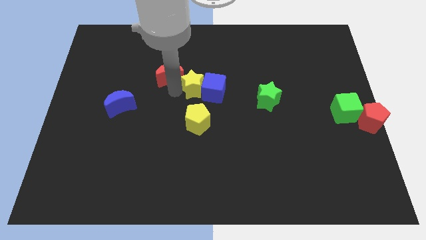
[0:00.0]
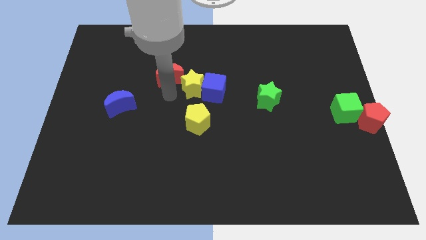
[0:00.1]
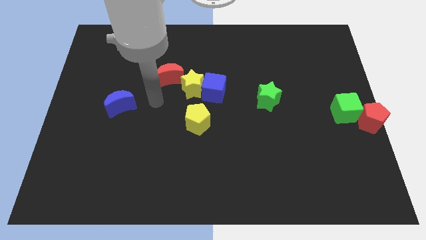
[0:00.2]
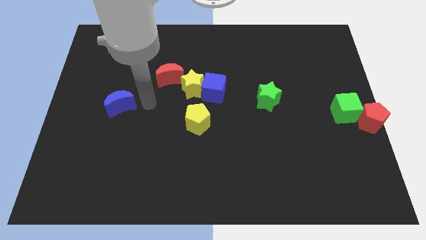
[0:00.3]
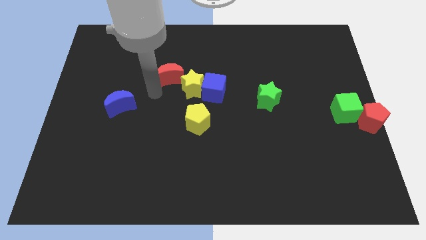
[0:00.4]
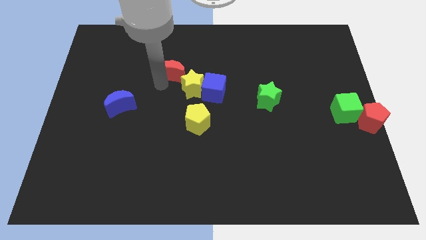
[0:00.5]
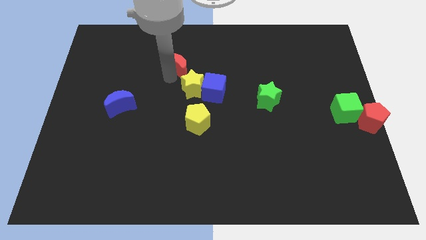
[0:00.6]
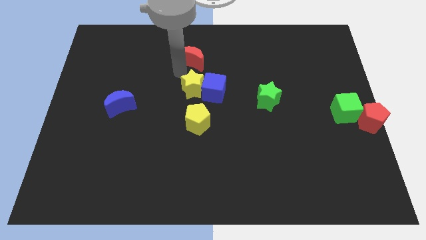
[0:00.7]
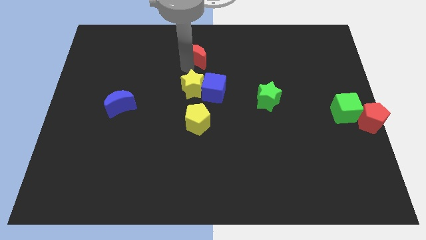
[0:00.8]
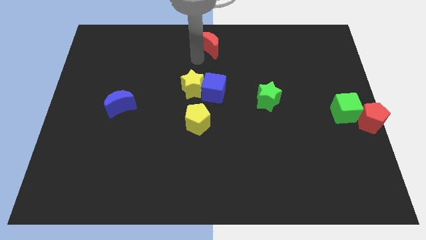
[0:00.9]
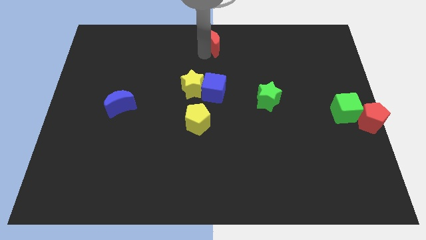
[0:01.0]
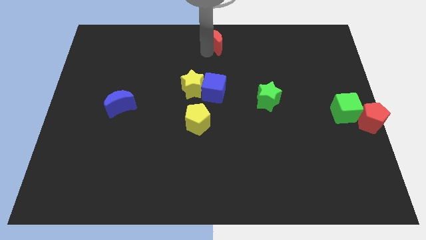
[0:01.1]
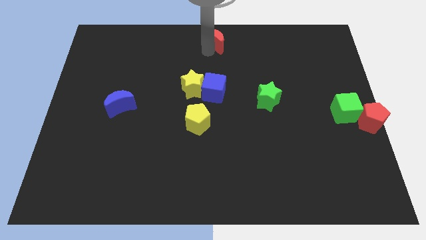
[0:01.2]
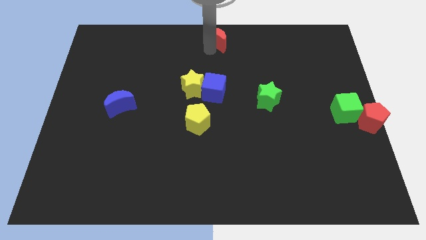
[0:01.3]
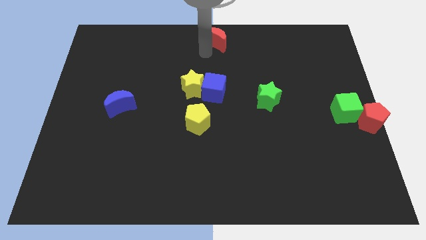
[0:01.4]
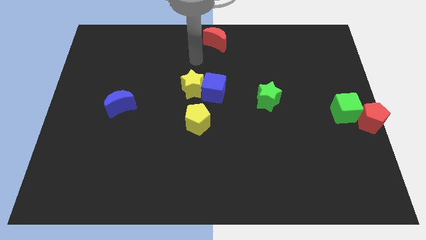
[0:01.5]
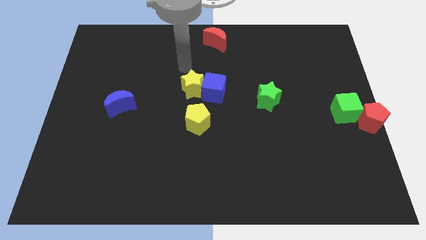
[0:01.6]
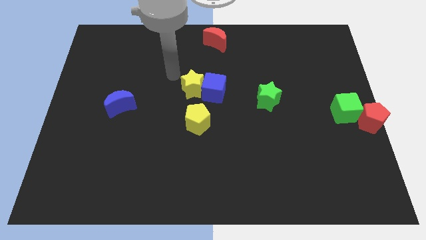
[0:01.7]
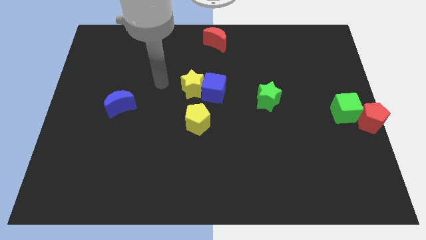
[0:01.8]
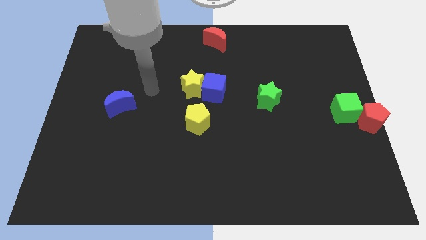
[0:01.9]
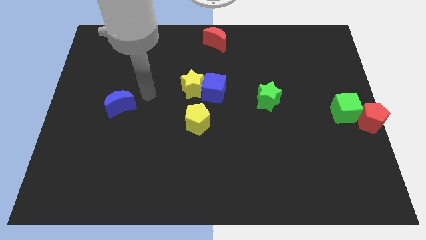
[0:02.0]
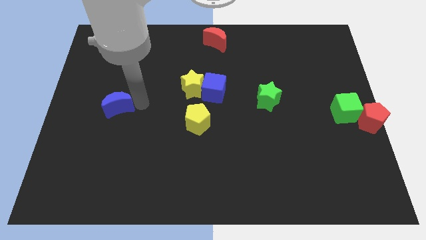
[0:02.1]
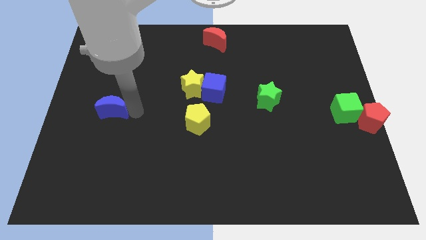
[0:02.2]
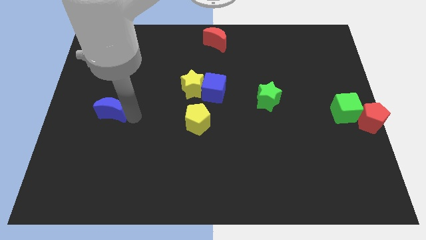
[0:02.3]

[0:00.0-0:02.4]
move the red crescent to the top center of the board

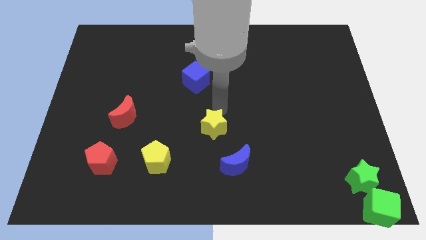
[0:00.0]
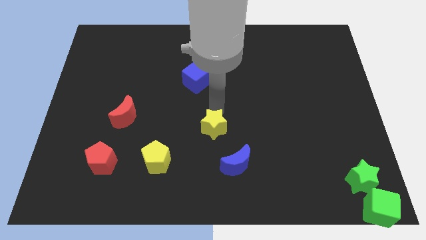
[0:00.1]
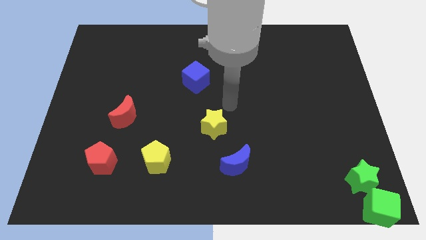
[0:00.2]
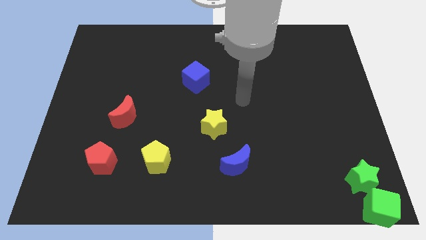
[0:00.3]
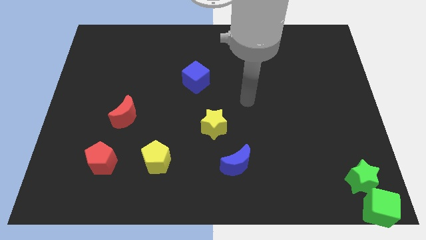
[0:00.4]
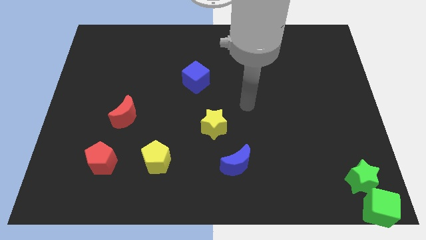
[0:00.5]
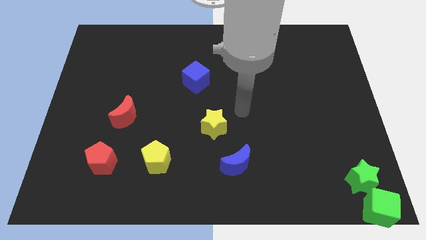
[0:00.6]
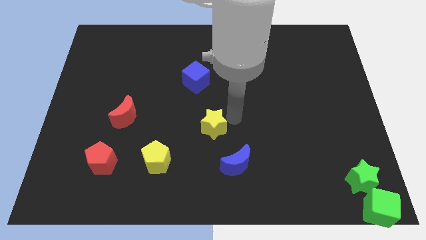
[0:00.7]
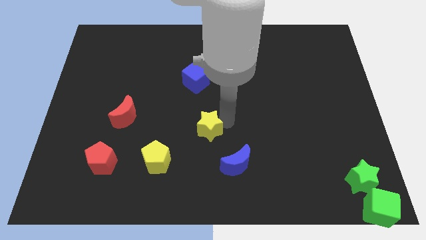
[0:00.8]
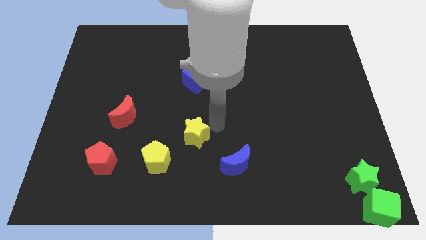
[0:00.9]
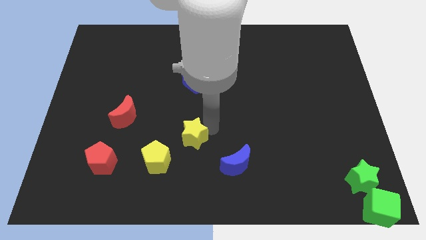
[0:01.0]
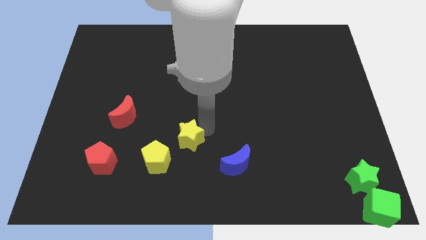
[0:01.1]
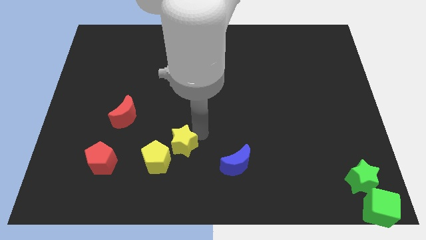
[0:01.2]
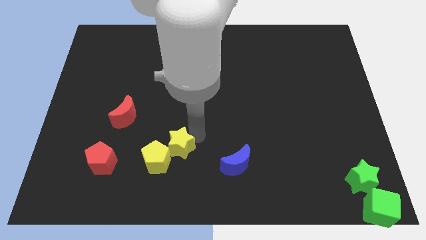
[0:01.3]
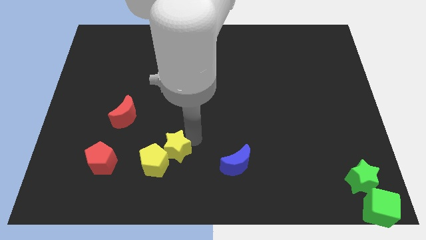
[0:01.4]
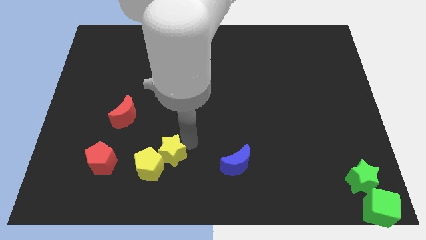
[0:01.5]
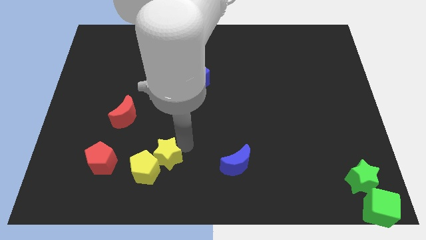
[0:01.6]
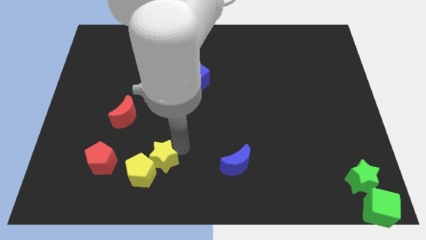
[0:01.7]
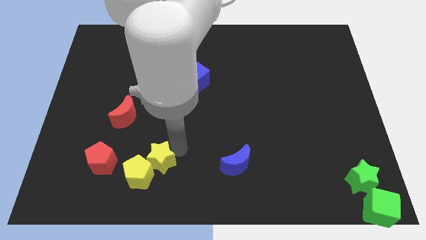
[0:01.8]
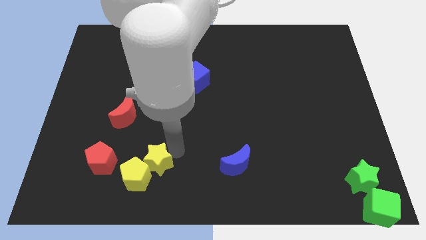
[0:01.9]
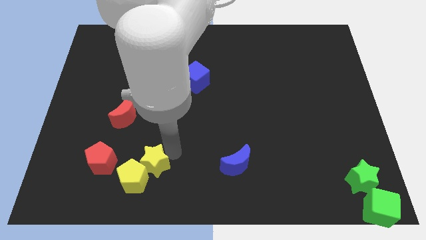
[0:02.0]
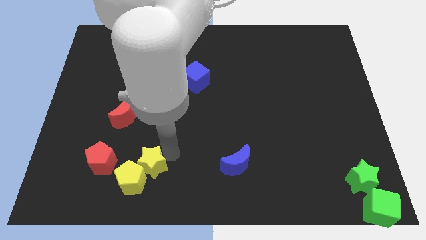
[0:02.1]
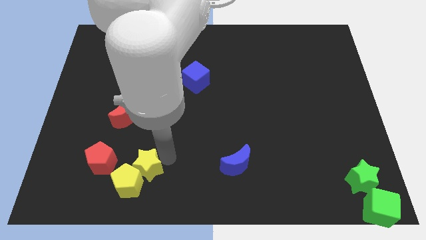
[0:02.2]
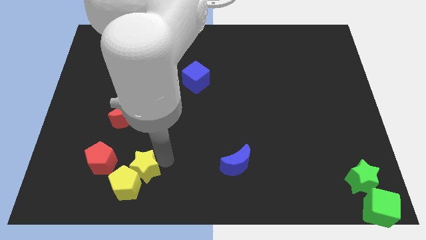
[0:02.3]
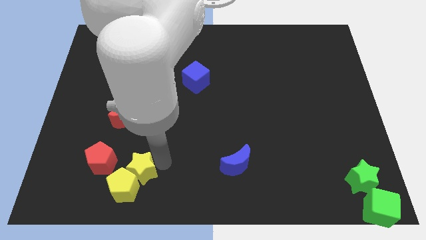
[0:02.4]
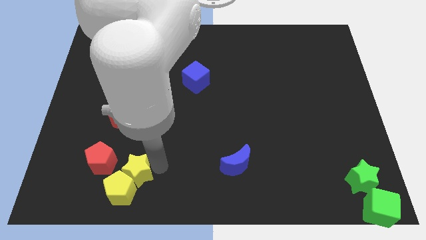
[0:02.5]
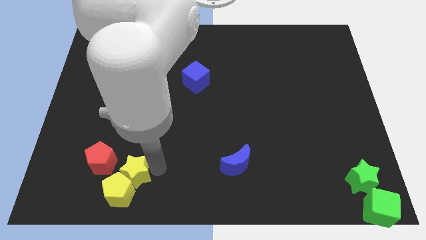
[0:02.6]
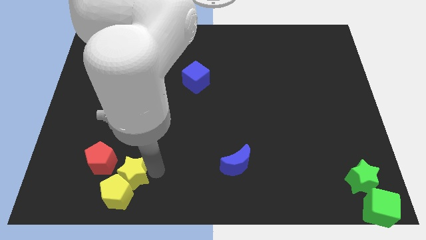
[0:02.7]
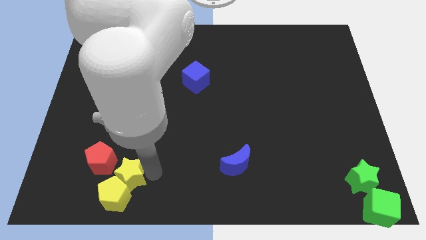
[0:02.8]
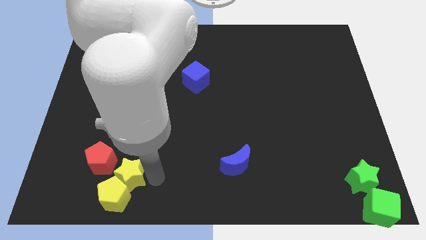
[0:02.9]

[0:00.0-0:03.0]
move the yellow star and yellow pentagon to the bottom left

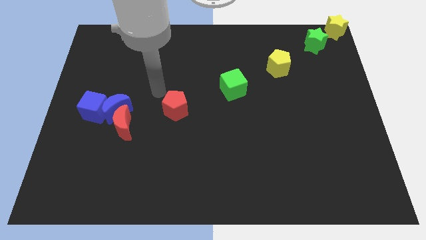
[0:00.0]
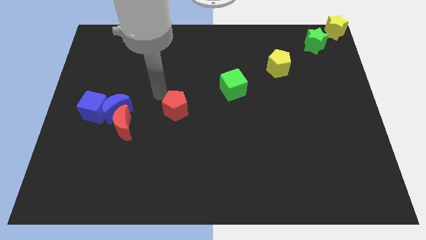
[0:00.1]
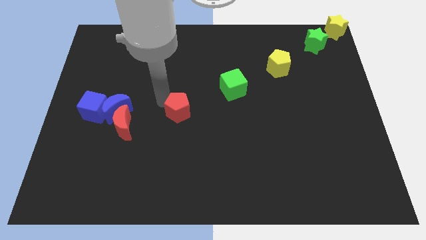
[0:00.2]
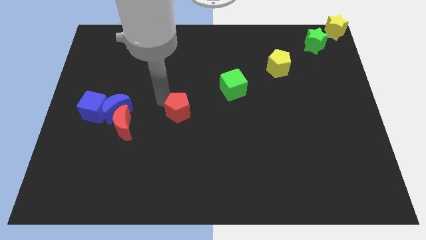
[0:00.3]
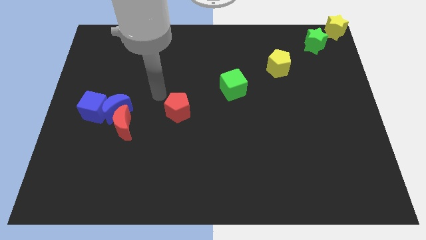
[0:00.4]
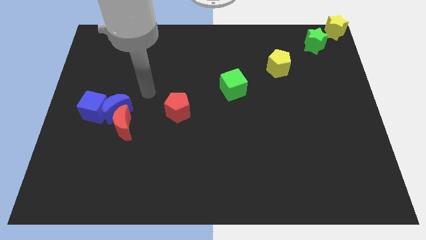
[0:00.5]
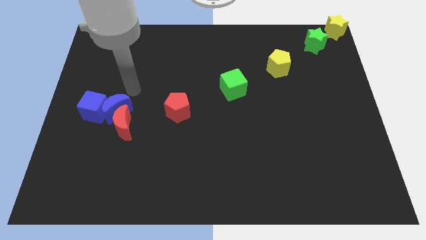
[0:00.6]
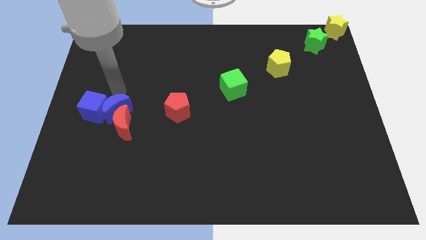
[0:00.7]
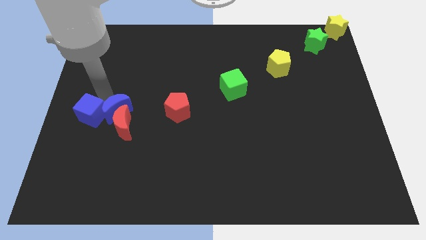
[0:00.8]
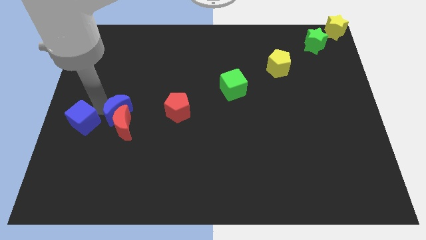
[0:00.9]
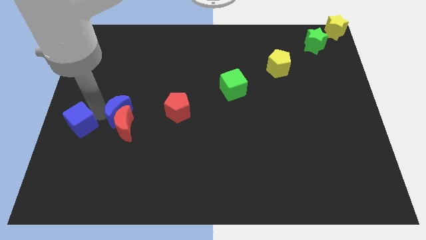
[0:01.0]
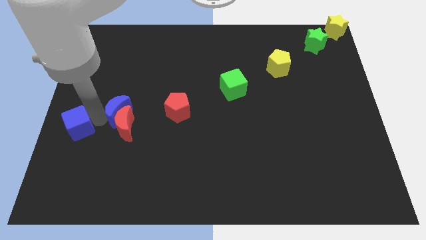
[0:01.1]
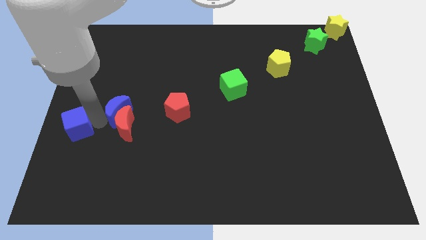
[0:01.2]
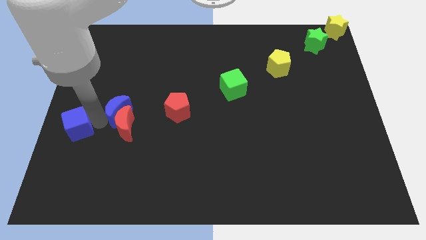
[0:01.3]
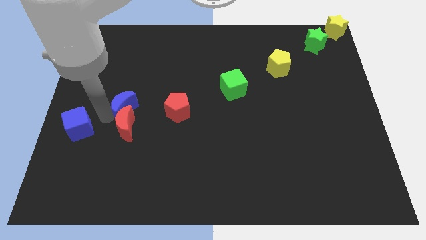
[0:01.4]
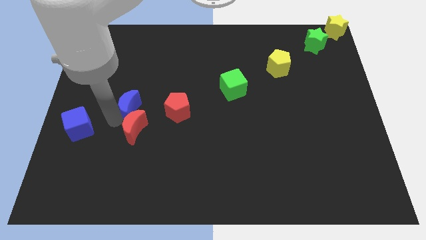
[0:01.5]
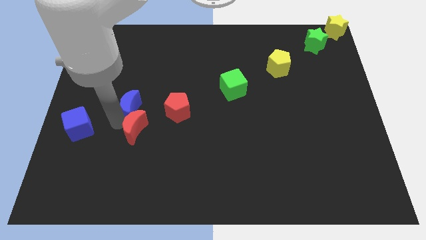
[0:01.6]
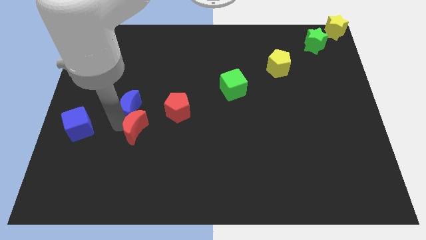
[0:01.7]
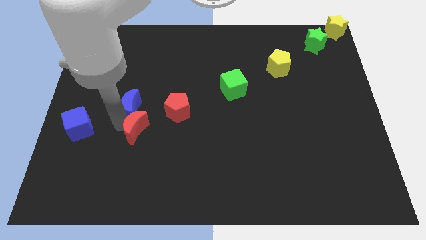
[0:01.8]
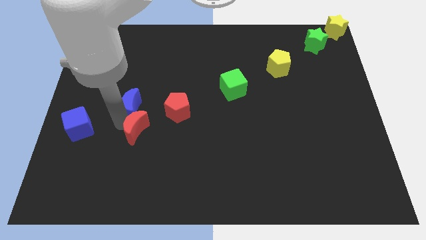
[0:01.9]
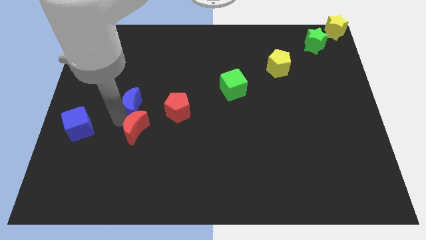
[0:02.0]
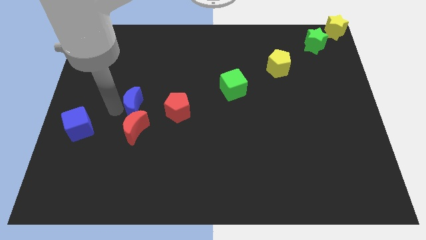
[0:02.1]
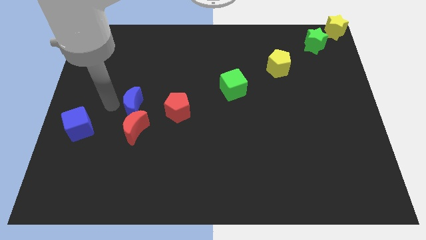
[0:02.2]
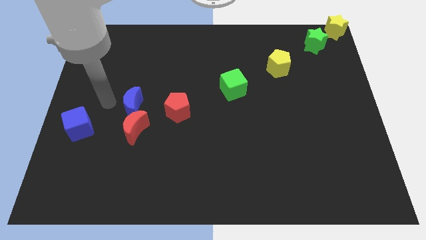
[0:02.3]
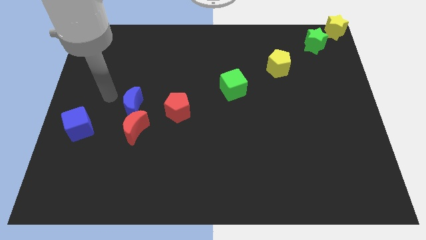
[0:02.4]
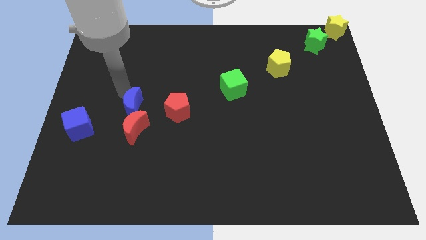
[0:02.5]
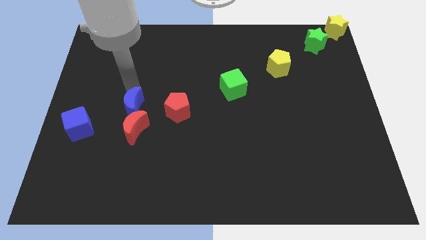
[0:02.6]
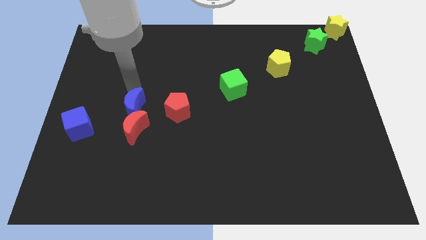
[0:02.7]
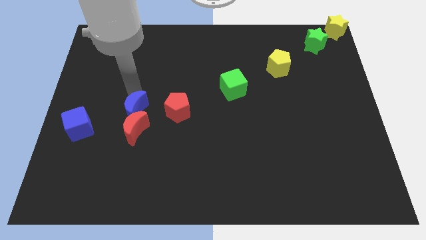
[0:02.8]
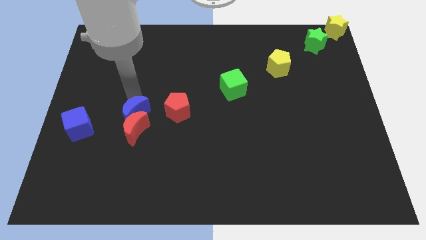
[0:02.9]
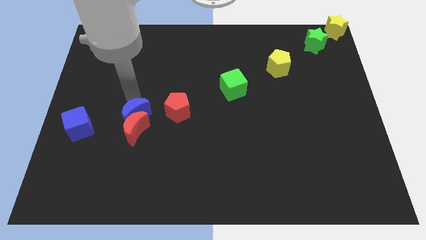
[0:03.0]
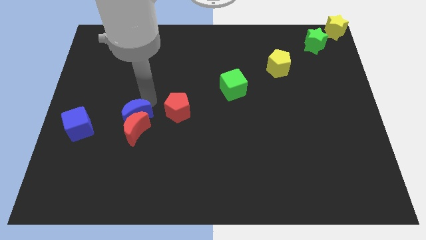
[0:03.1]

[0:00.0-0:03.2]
place the blue moon on the top right of the red moon

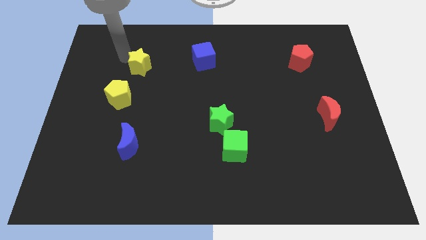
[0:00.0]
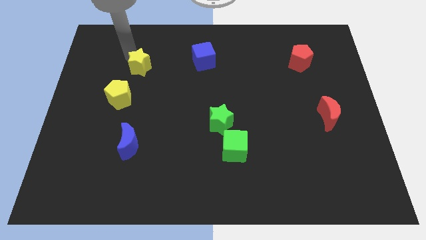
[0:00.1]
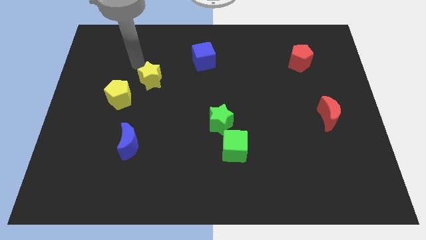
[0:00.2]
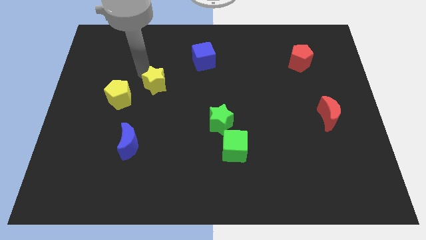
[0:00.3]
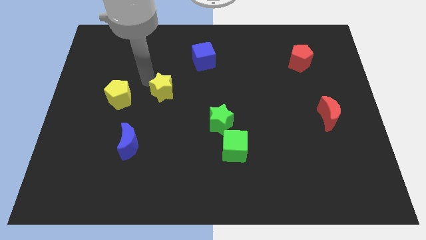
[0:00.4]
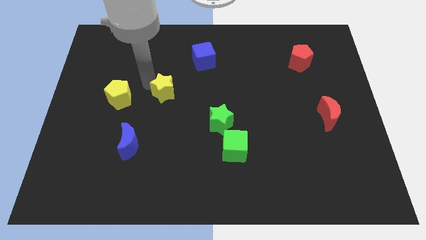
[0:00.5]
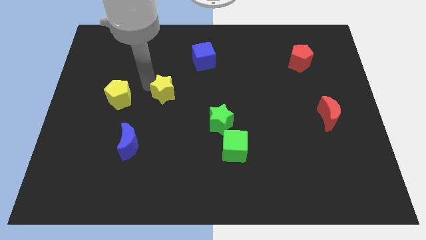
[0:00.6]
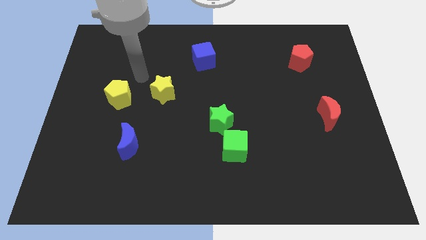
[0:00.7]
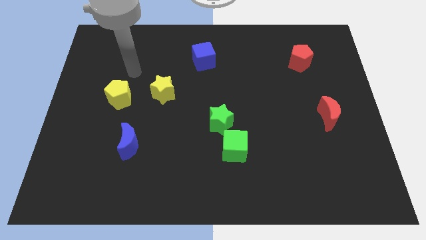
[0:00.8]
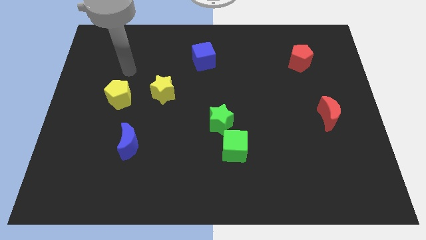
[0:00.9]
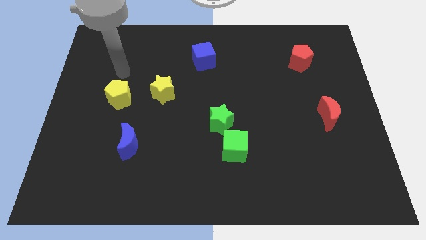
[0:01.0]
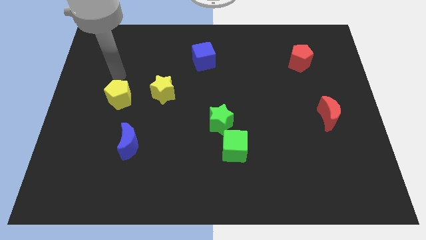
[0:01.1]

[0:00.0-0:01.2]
slightly push the yellow star
